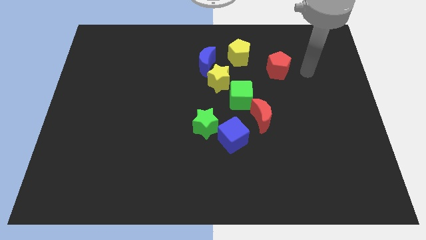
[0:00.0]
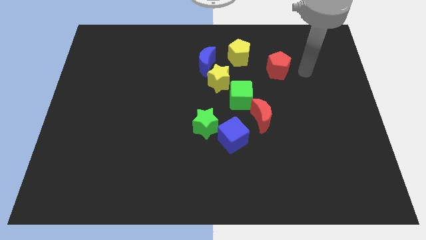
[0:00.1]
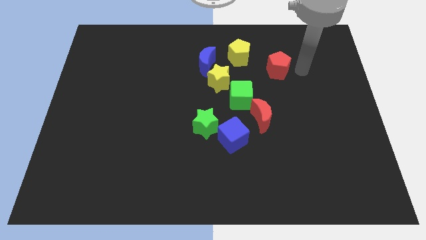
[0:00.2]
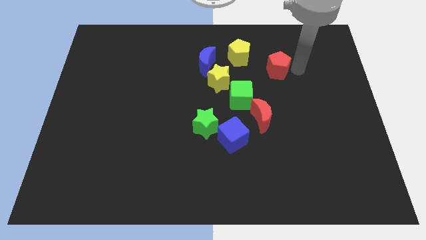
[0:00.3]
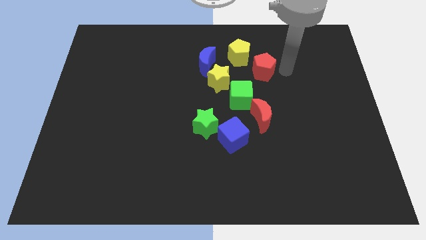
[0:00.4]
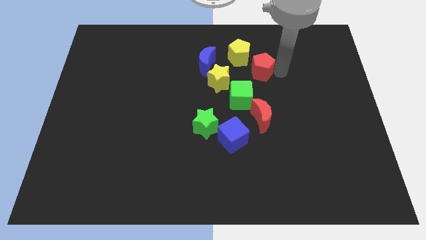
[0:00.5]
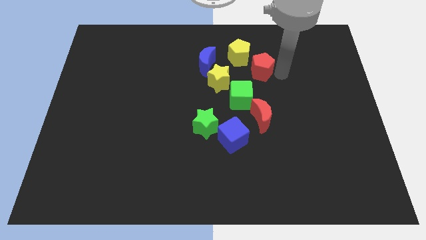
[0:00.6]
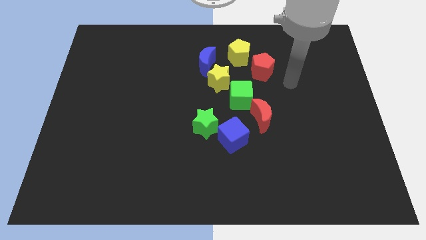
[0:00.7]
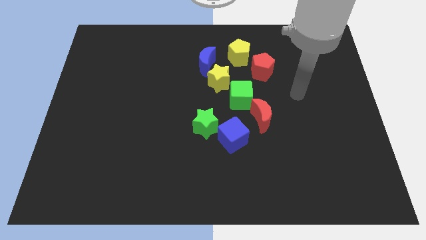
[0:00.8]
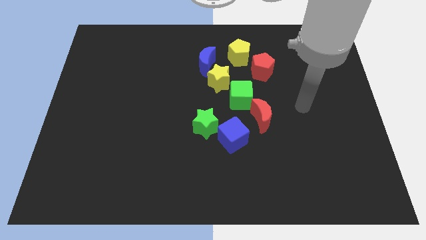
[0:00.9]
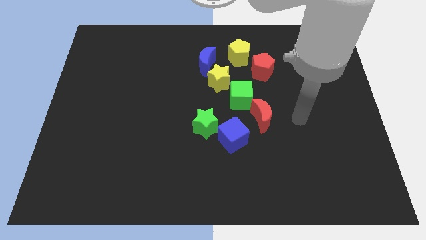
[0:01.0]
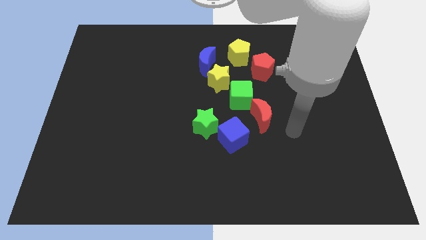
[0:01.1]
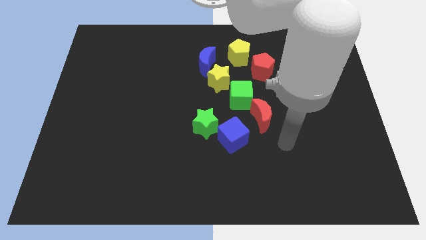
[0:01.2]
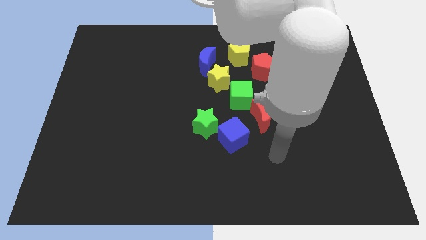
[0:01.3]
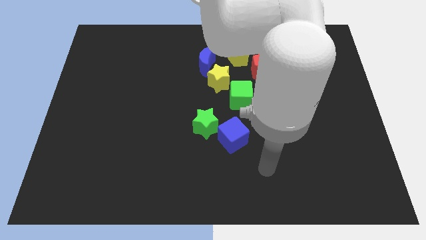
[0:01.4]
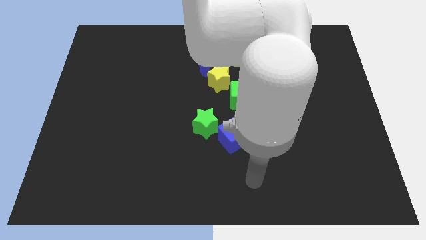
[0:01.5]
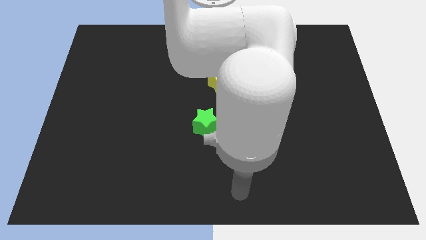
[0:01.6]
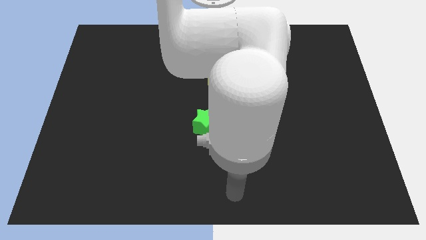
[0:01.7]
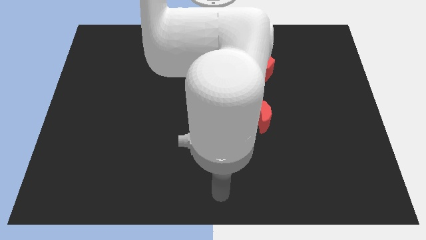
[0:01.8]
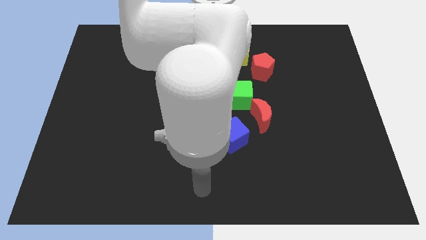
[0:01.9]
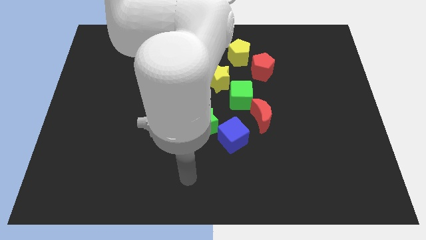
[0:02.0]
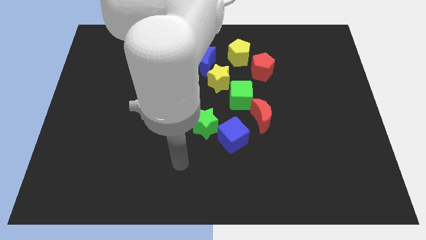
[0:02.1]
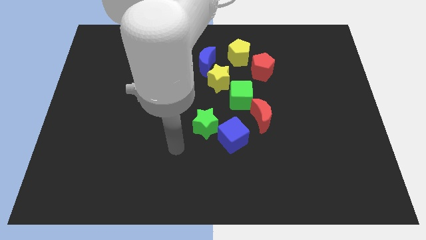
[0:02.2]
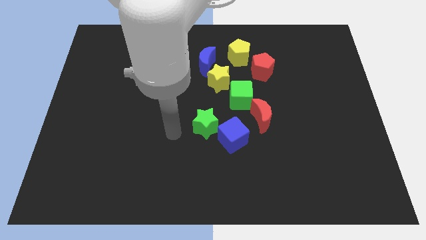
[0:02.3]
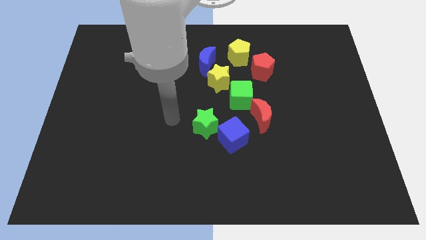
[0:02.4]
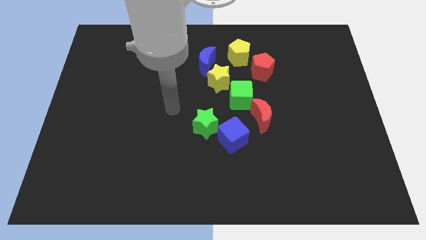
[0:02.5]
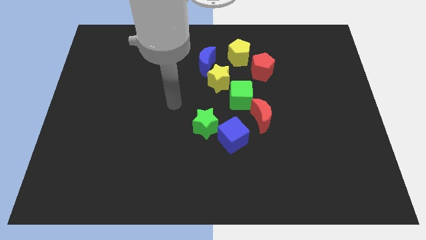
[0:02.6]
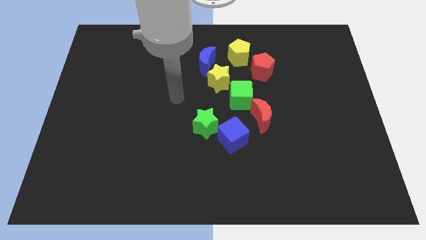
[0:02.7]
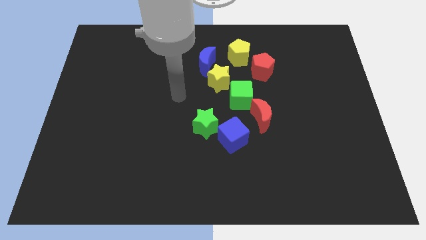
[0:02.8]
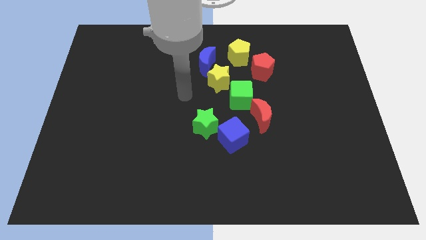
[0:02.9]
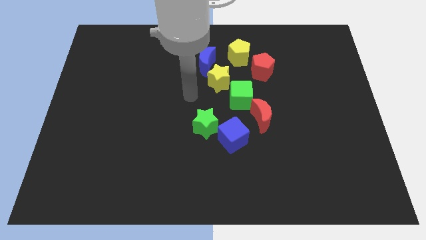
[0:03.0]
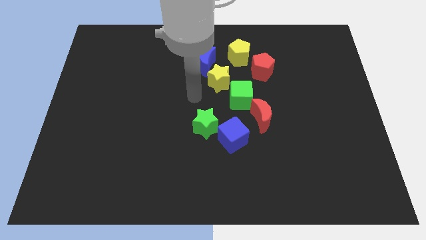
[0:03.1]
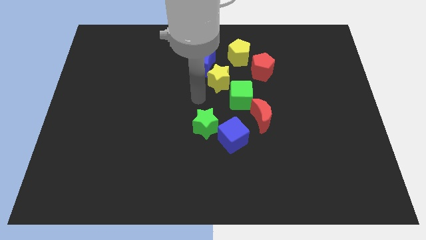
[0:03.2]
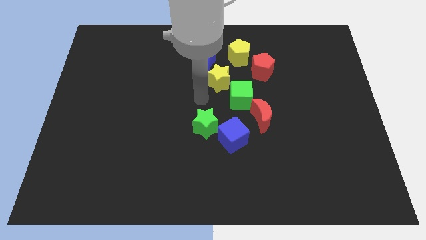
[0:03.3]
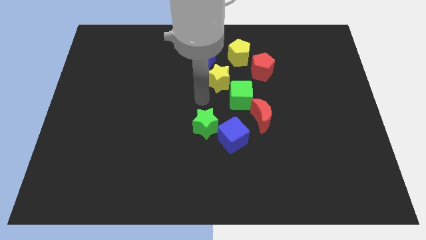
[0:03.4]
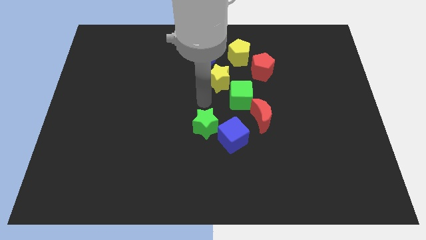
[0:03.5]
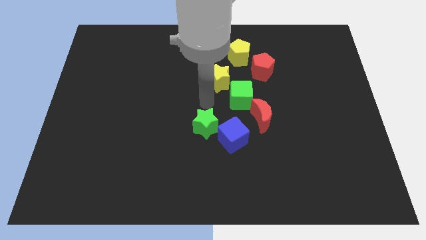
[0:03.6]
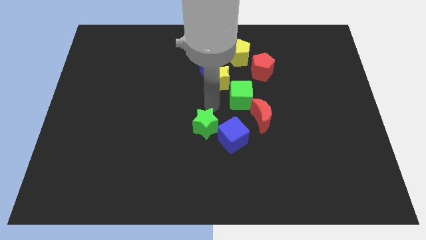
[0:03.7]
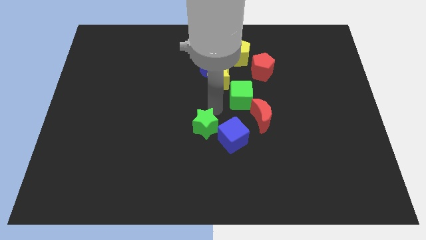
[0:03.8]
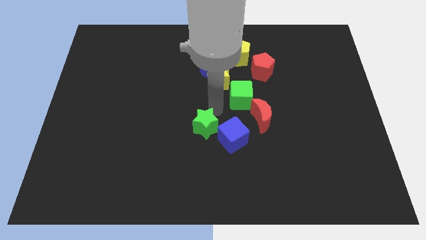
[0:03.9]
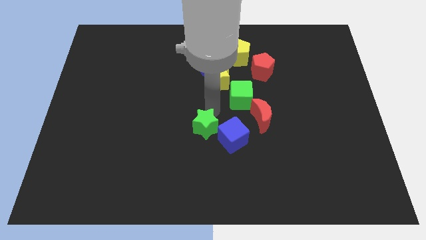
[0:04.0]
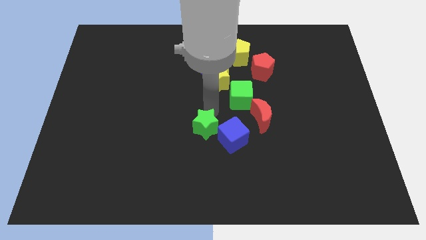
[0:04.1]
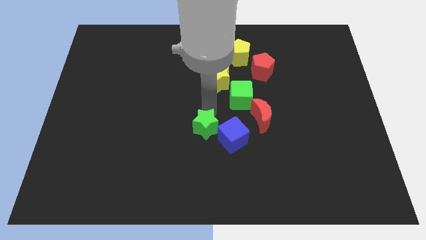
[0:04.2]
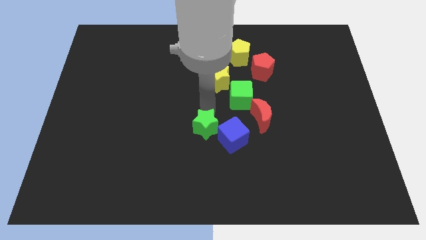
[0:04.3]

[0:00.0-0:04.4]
point your arm above green star

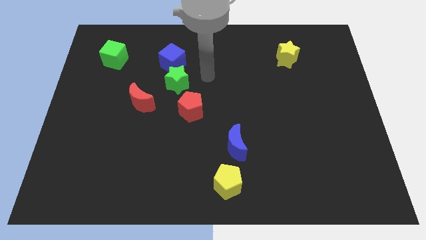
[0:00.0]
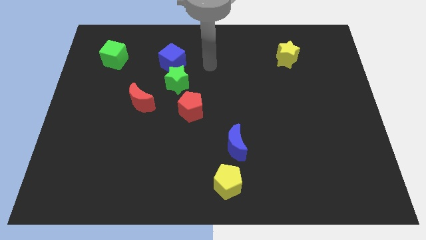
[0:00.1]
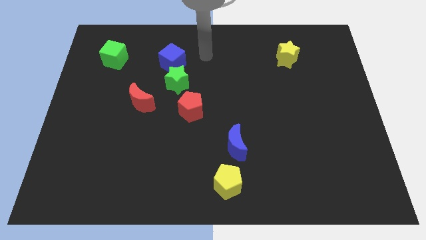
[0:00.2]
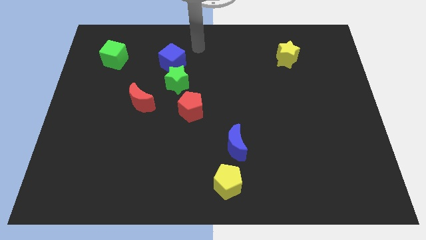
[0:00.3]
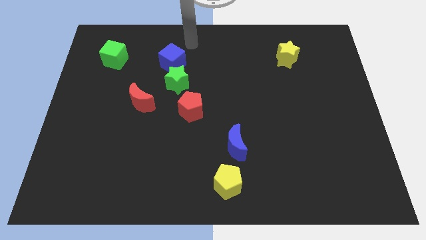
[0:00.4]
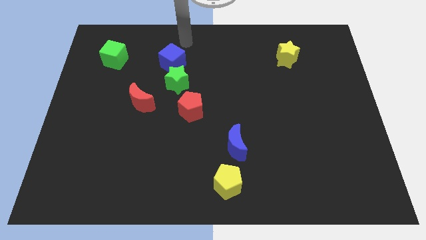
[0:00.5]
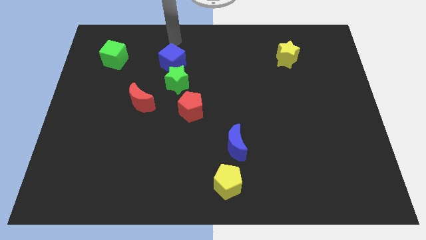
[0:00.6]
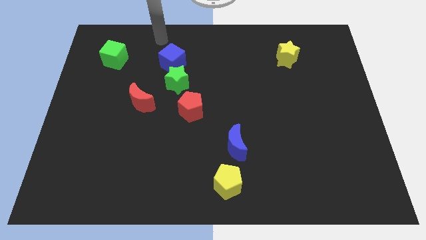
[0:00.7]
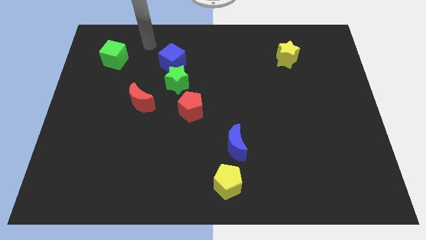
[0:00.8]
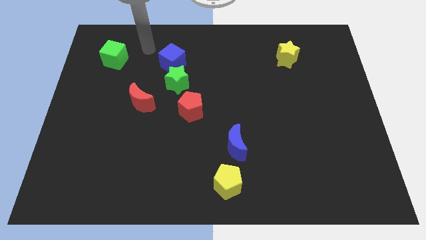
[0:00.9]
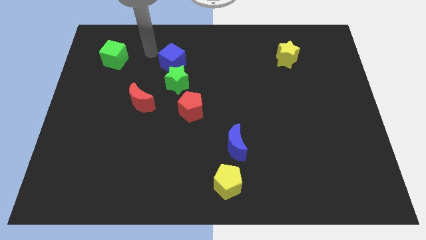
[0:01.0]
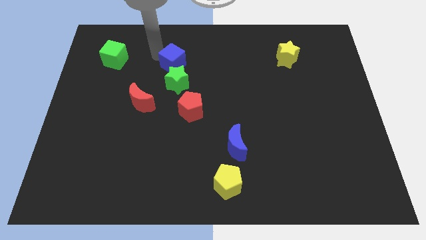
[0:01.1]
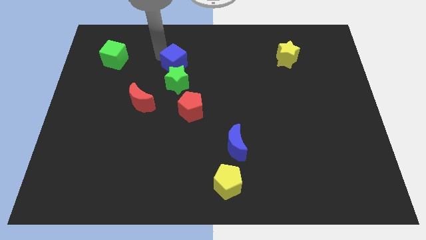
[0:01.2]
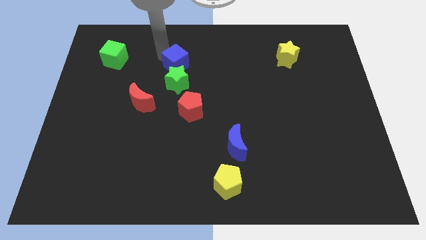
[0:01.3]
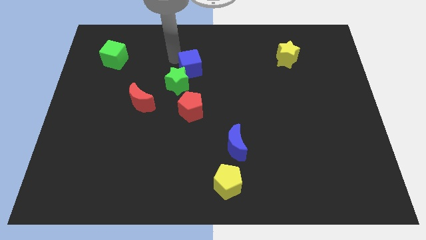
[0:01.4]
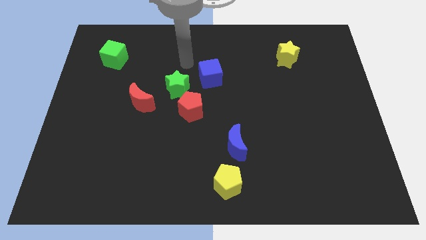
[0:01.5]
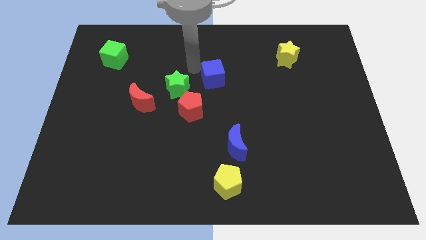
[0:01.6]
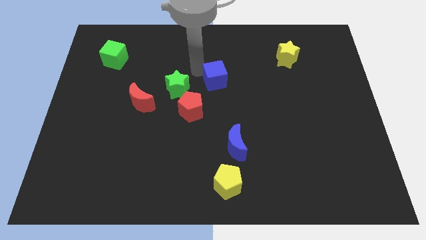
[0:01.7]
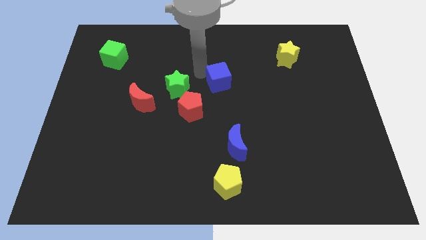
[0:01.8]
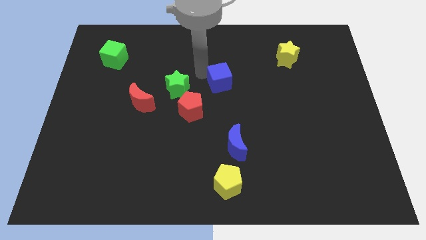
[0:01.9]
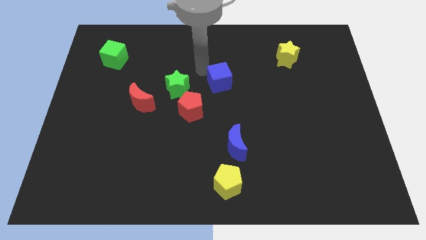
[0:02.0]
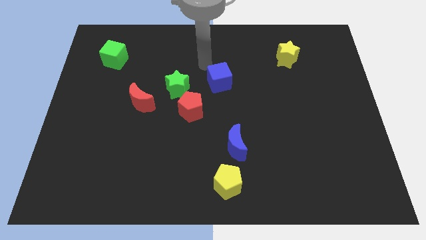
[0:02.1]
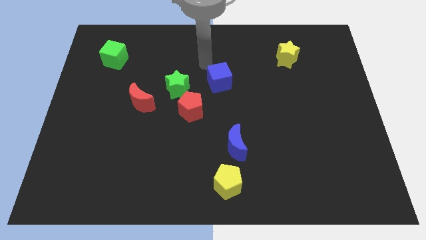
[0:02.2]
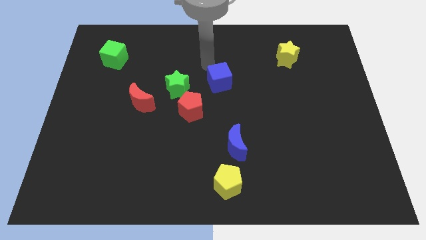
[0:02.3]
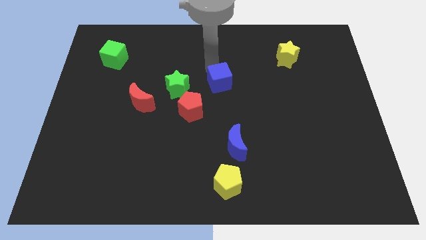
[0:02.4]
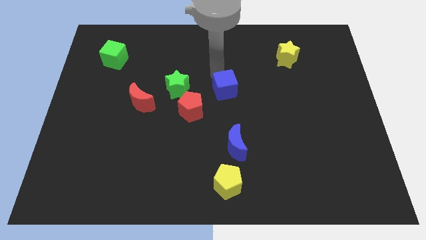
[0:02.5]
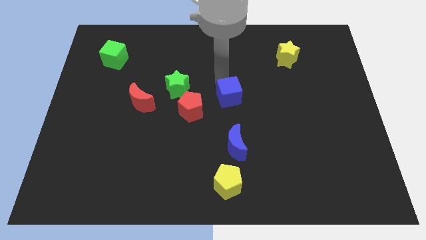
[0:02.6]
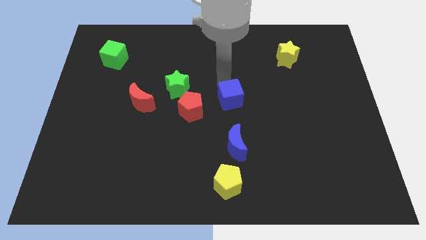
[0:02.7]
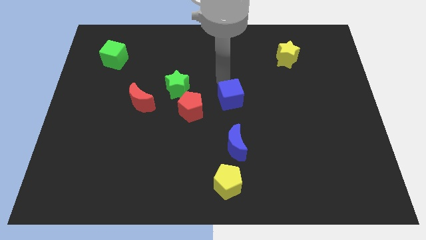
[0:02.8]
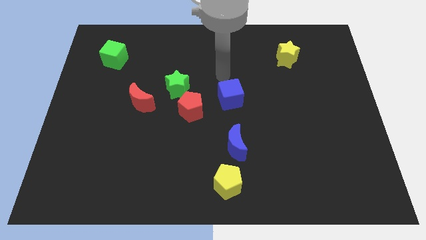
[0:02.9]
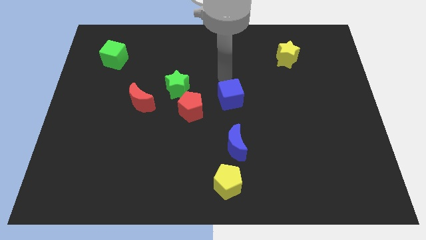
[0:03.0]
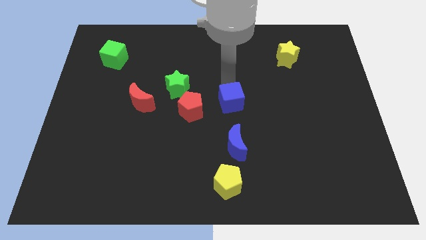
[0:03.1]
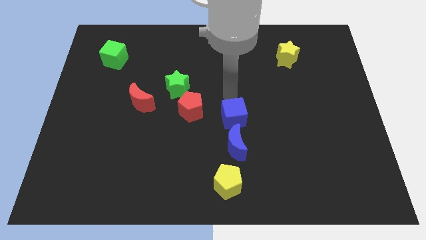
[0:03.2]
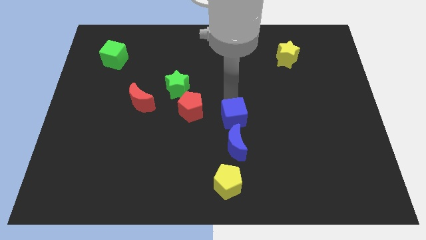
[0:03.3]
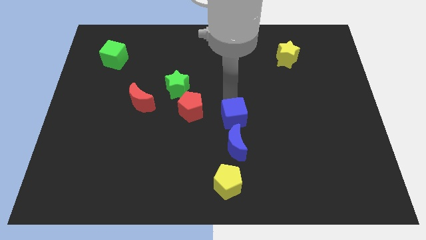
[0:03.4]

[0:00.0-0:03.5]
move the blue cube above the blue moon

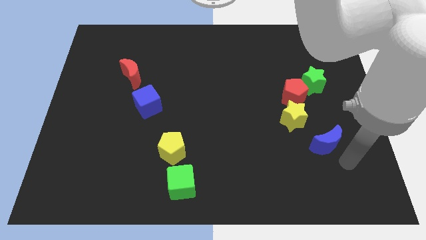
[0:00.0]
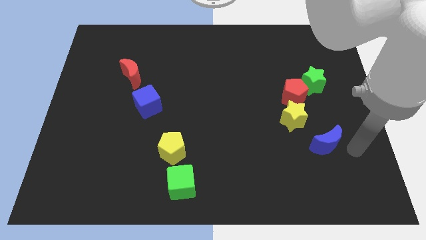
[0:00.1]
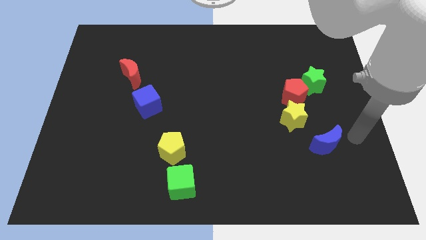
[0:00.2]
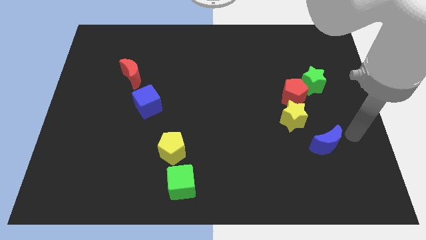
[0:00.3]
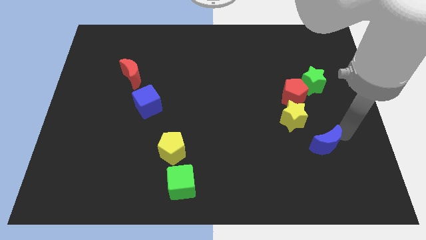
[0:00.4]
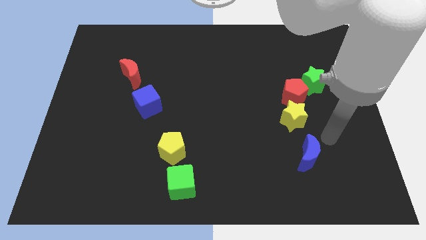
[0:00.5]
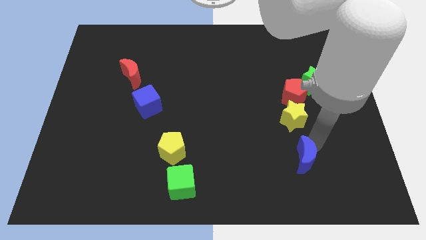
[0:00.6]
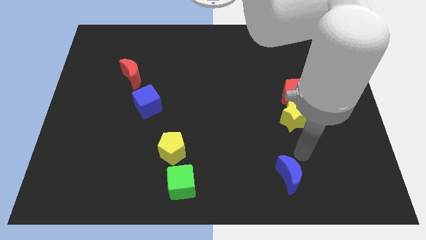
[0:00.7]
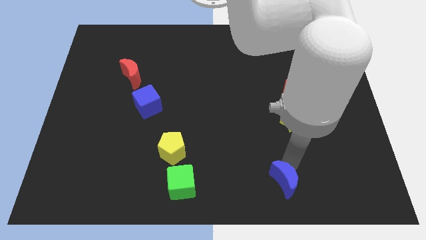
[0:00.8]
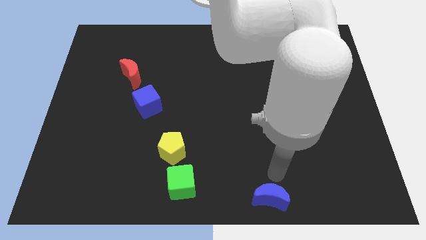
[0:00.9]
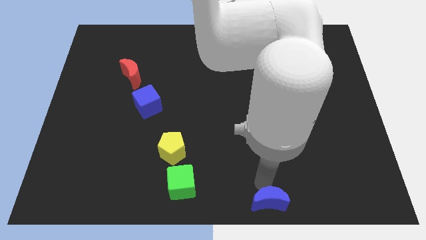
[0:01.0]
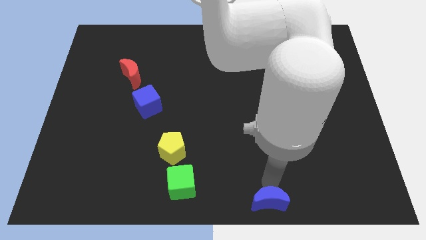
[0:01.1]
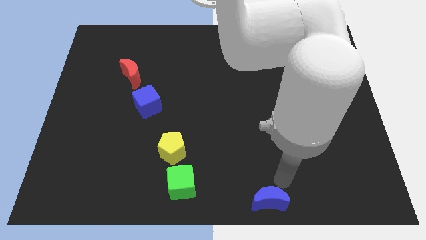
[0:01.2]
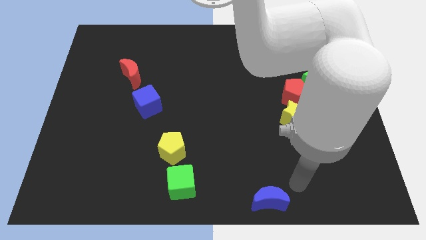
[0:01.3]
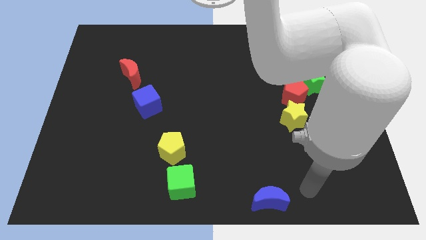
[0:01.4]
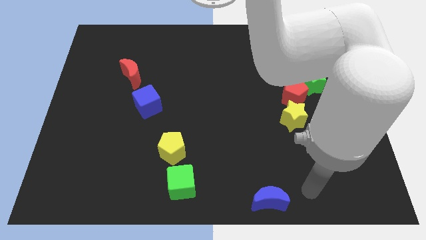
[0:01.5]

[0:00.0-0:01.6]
push the blue moon to the middle bottom
